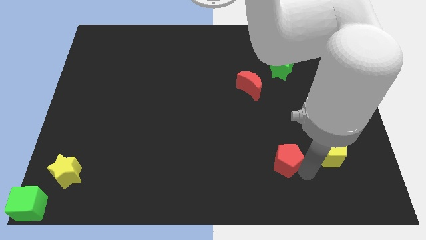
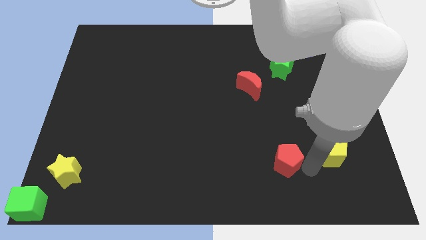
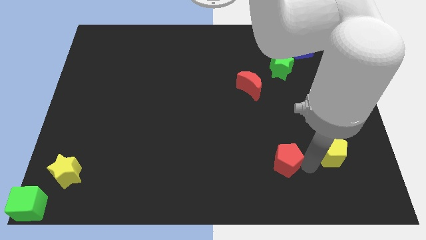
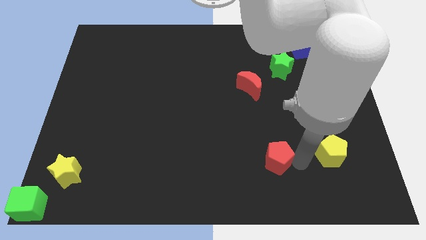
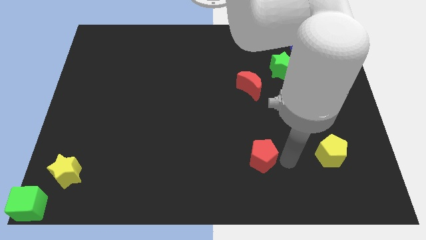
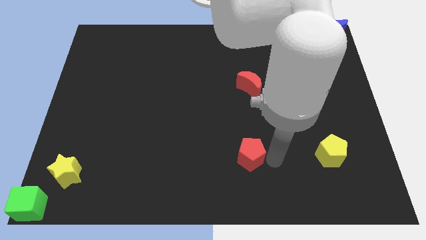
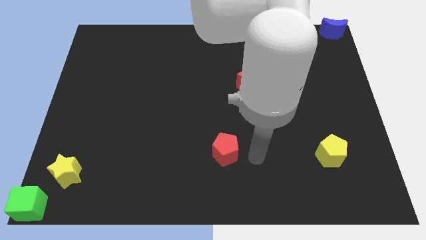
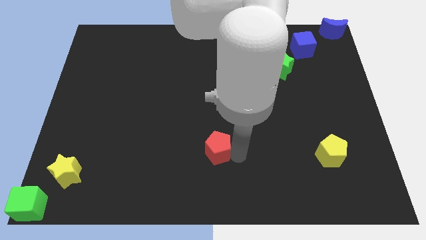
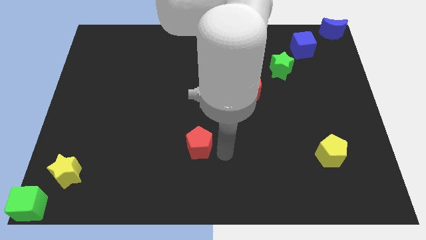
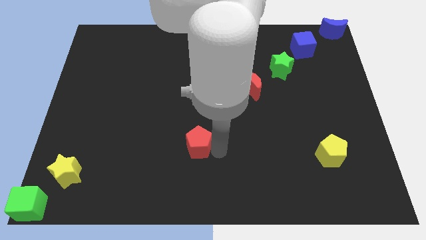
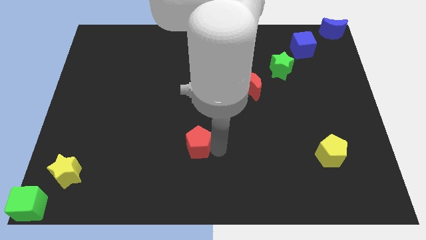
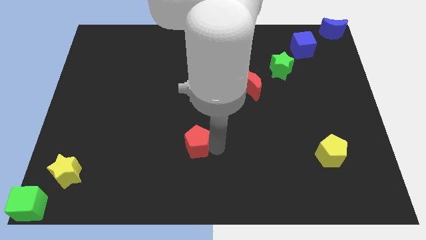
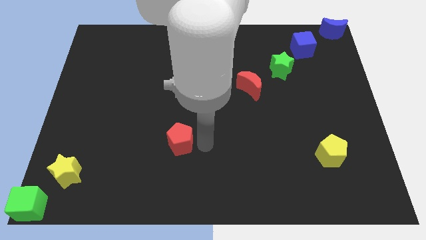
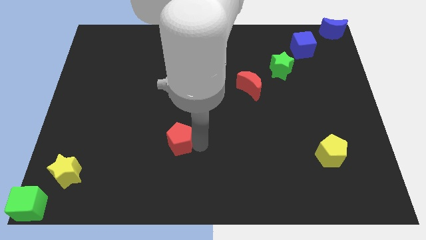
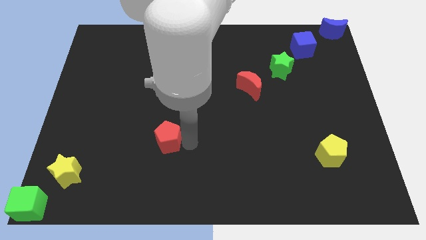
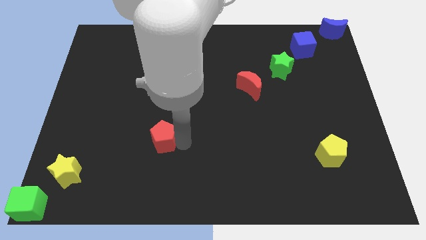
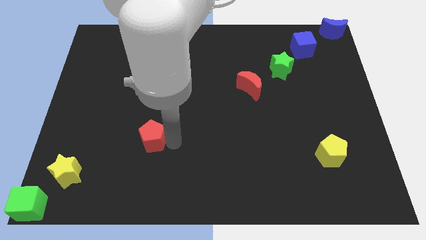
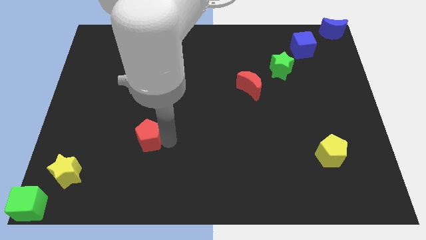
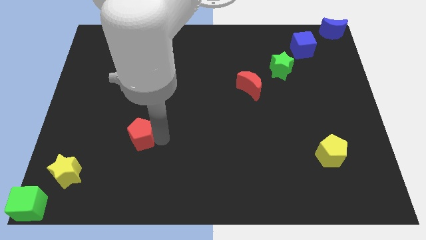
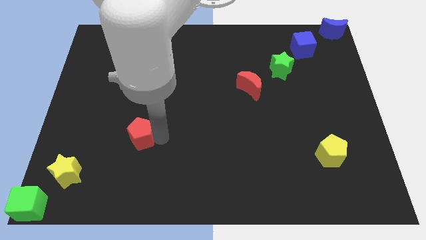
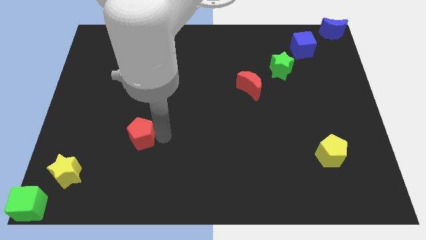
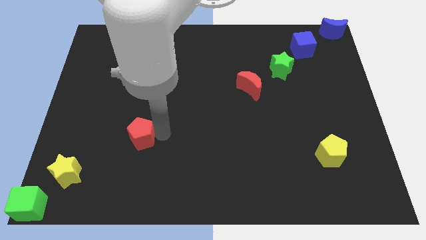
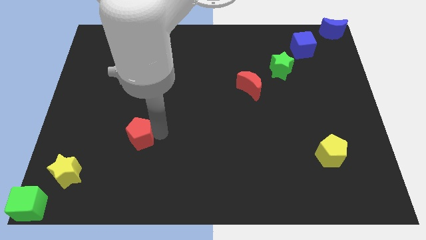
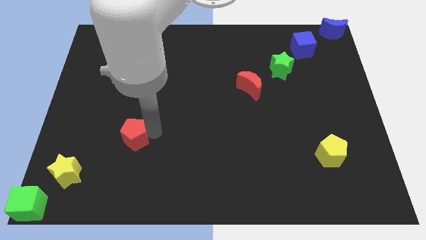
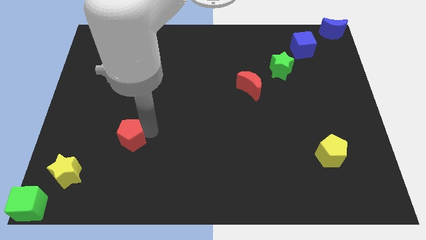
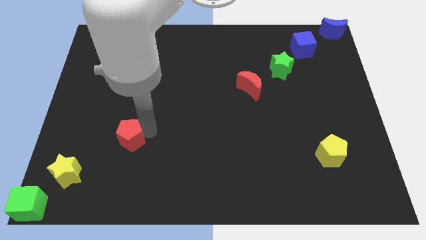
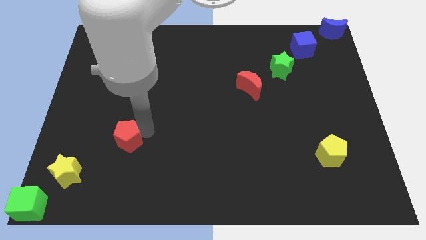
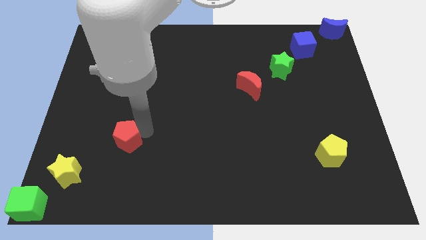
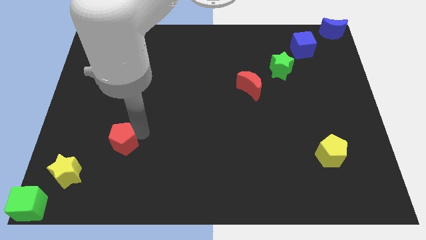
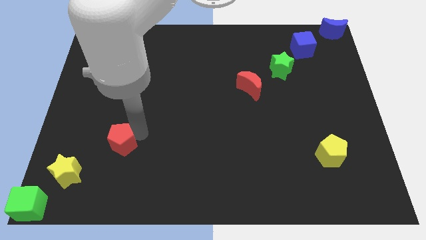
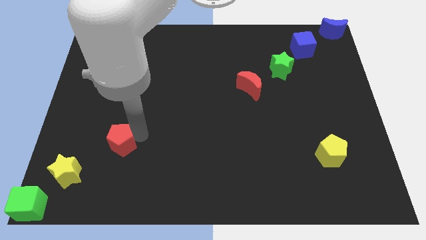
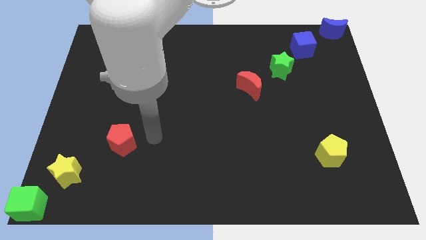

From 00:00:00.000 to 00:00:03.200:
slide the red pentagon slightly to the left

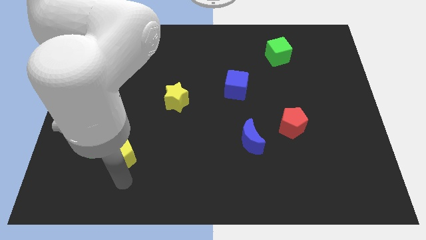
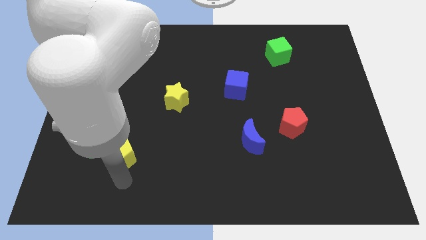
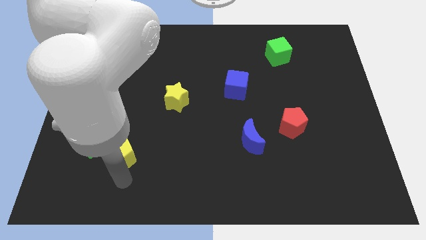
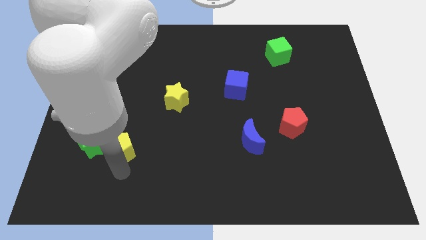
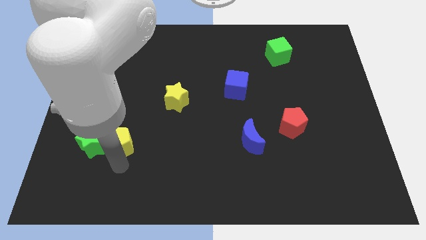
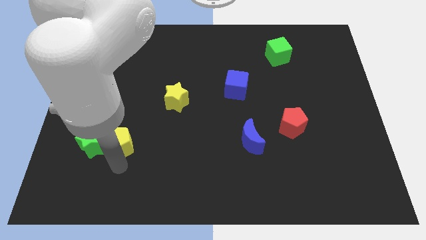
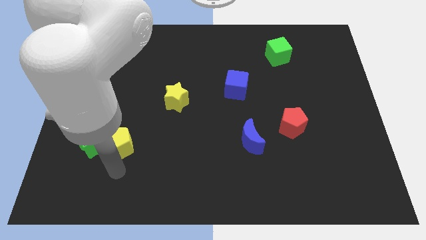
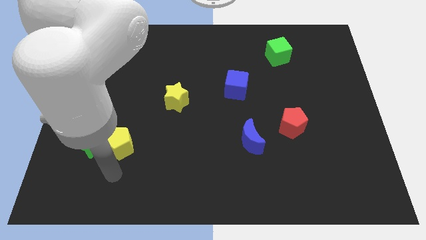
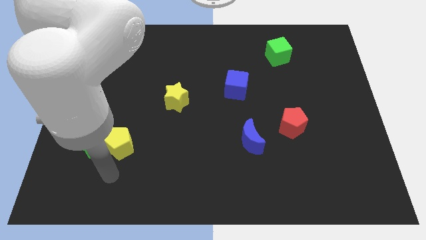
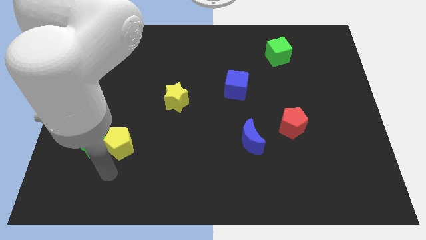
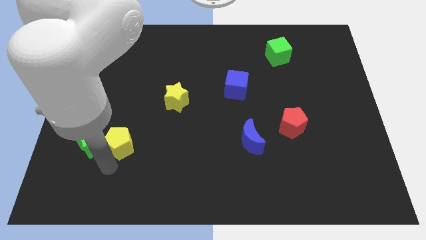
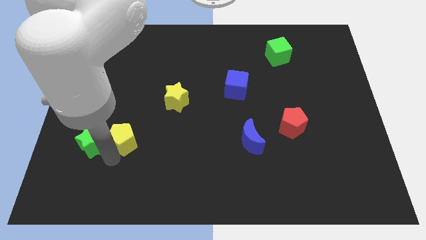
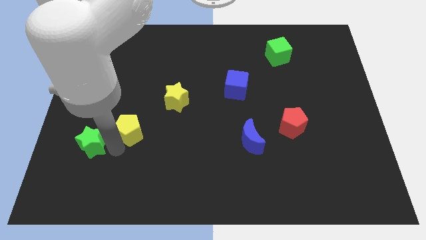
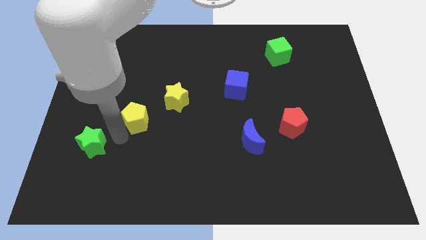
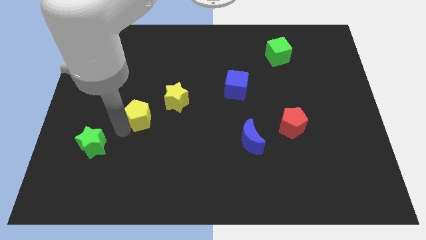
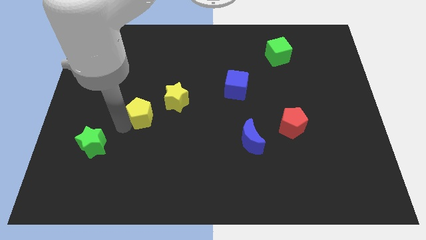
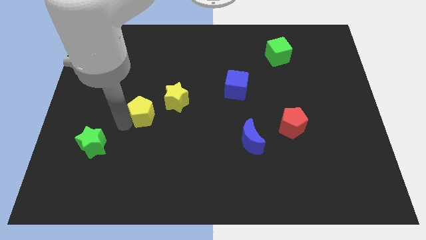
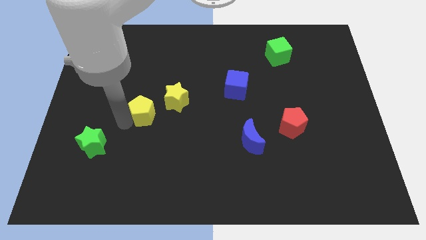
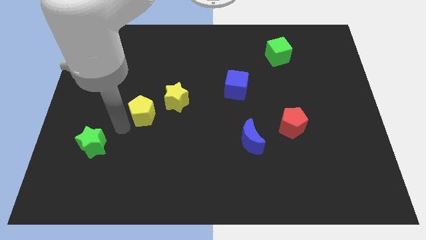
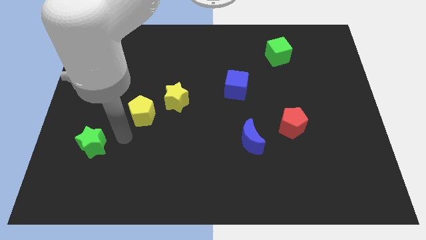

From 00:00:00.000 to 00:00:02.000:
slide the yellow pentagon towards the yellow star

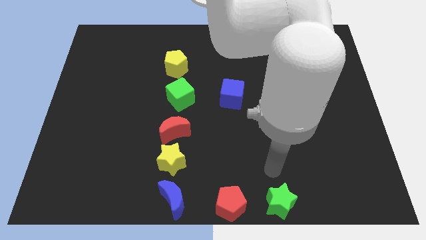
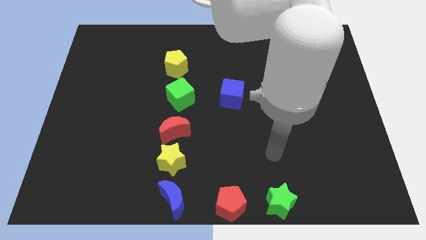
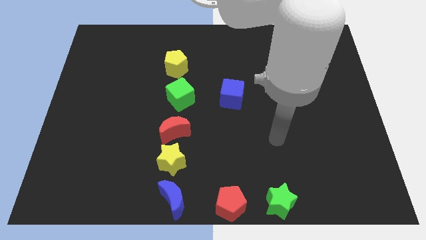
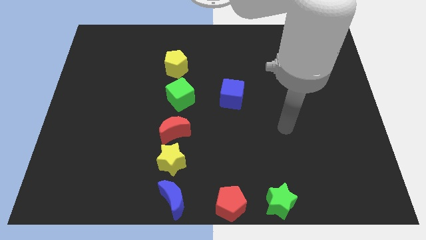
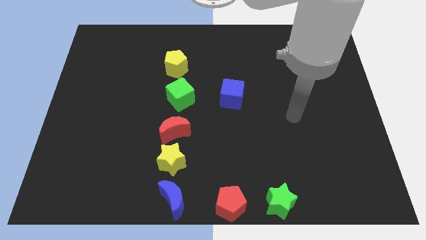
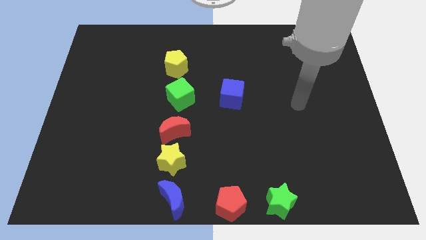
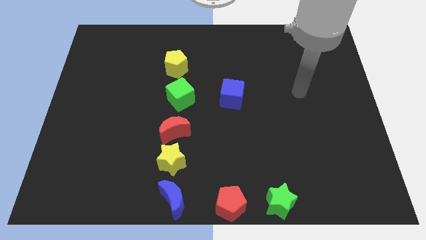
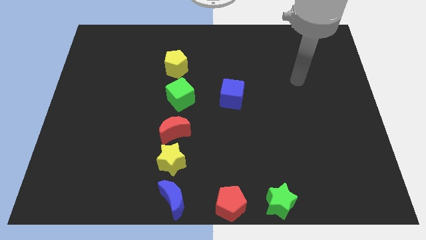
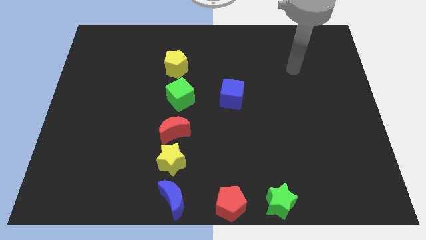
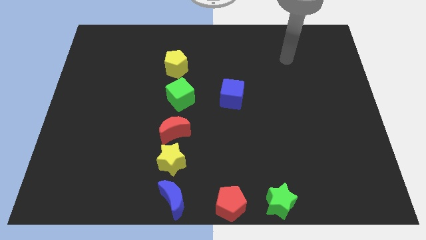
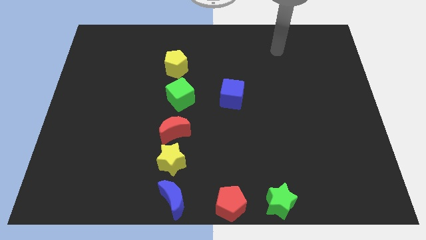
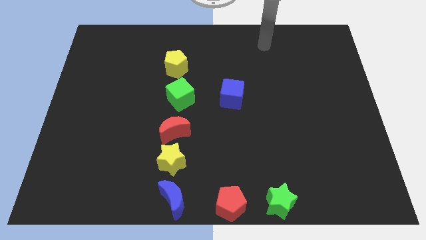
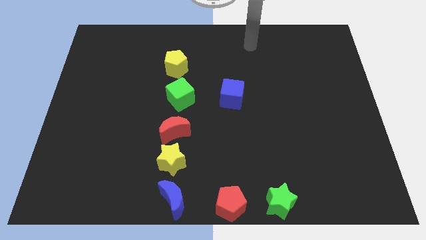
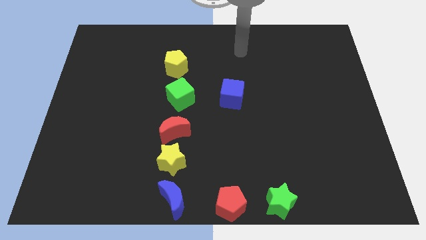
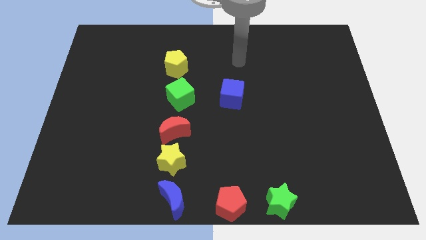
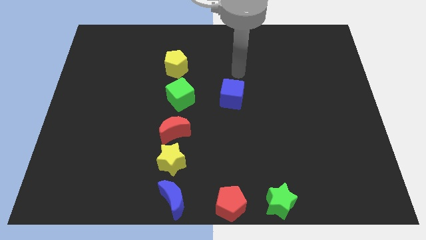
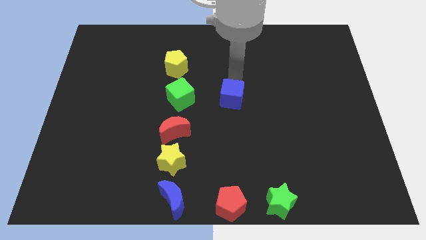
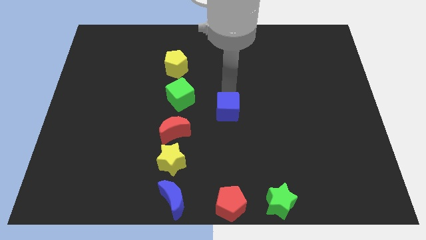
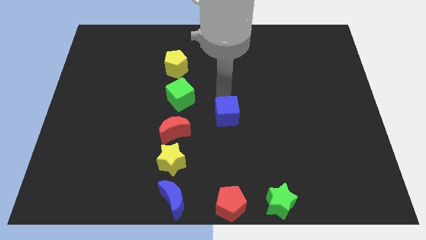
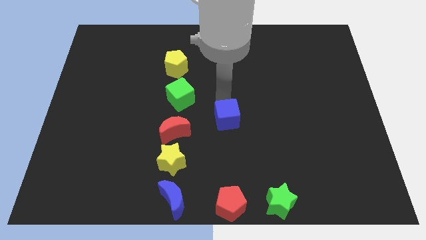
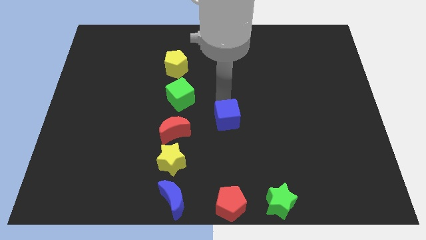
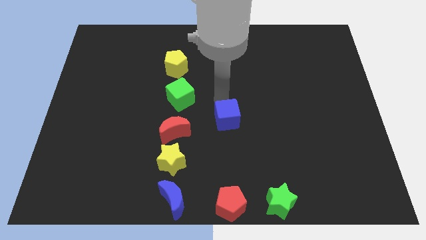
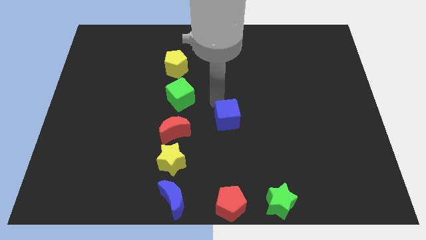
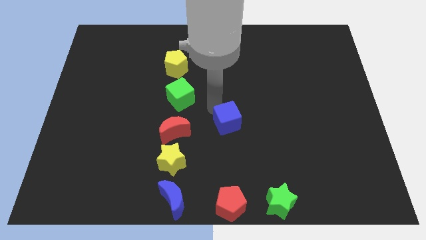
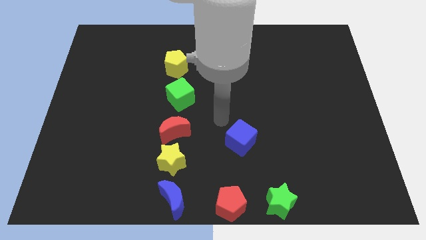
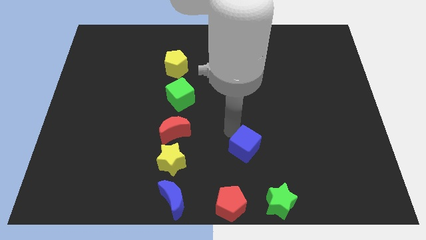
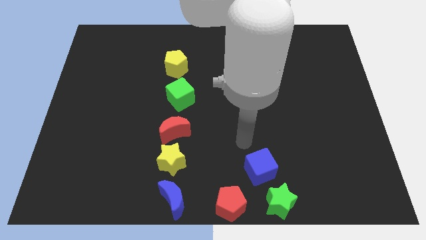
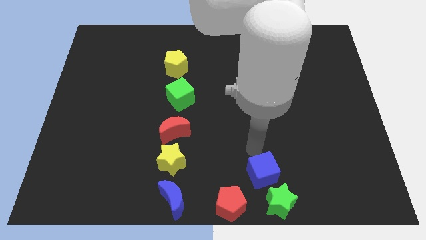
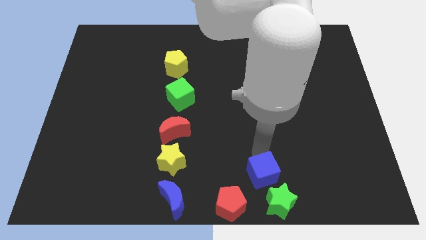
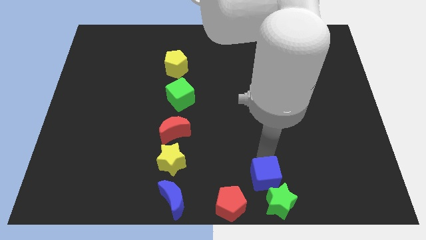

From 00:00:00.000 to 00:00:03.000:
put the blue cube at the top of green star

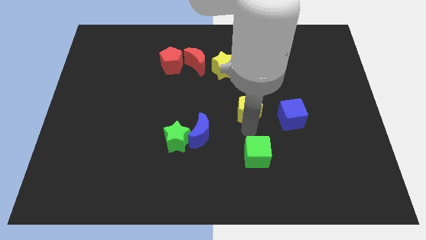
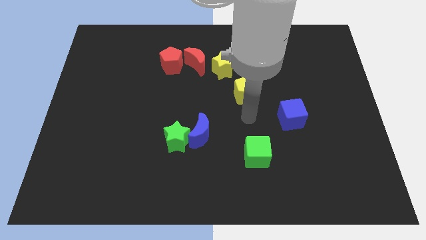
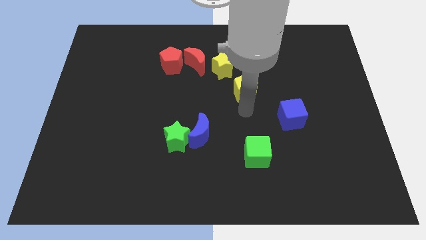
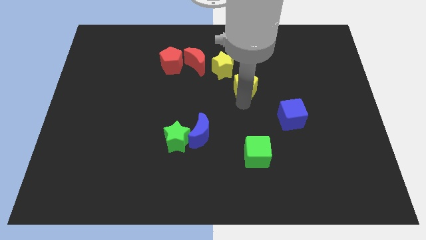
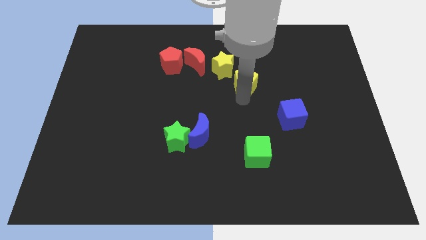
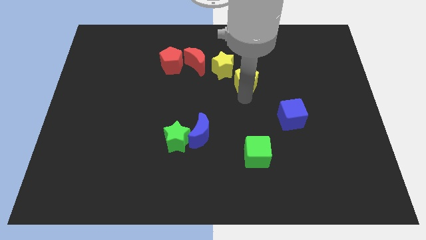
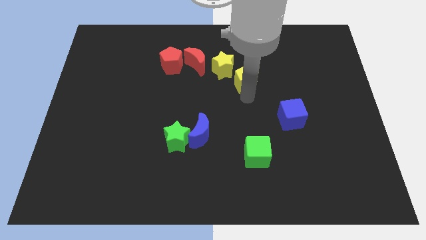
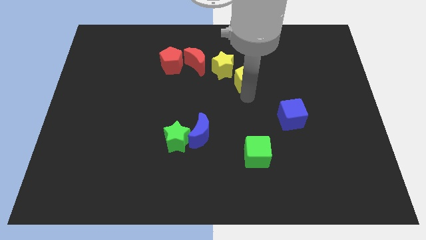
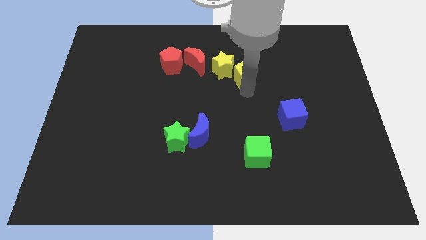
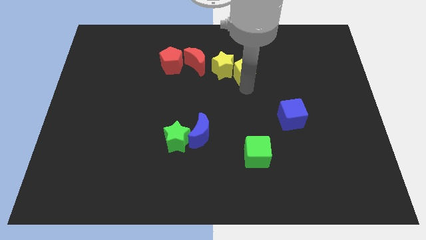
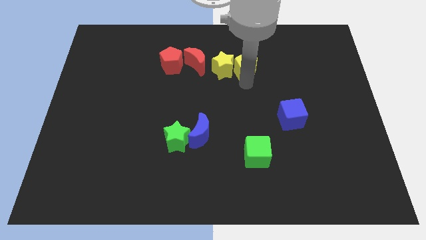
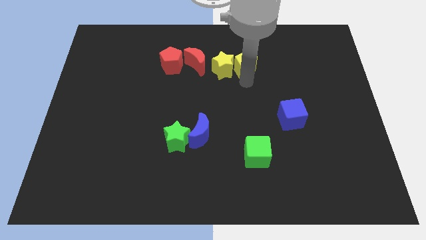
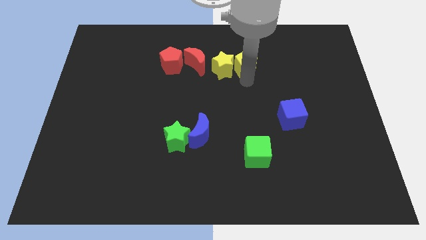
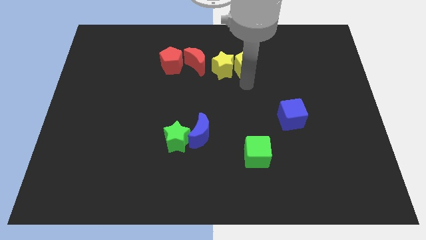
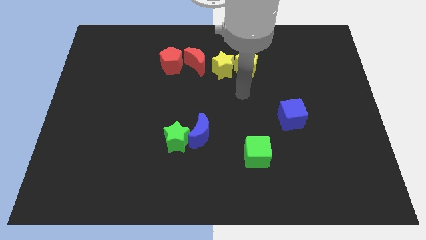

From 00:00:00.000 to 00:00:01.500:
place the yellow pentagon to the right of yellow star
